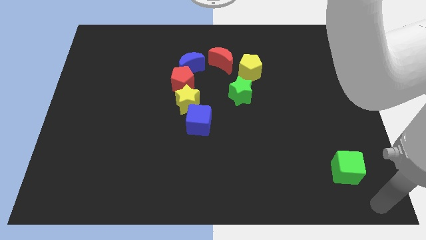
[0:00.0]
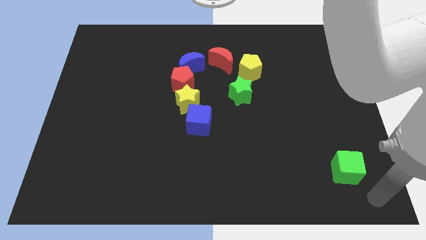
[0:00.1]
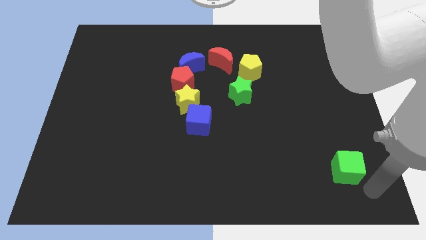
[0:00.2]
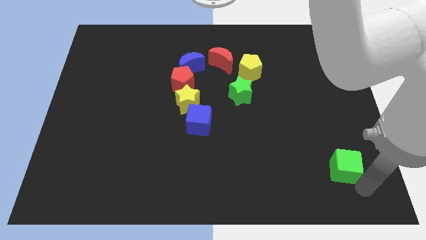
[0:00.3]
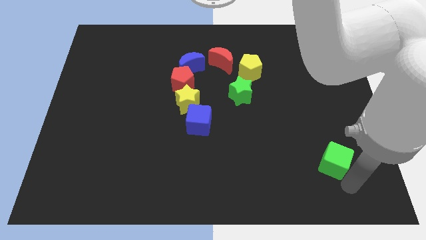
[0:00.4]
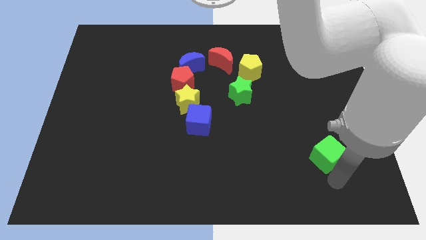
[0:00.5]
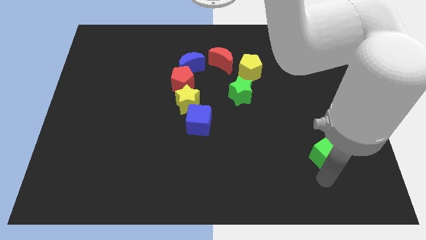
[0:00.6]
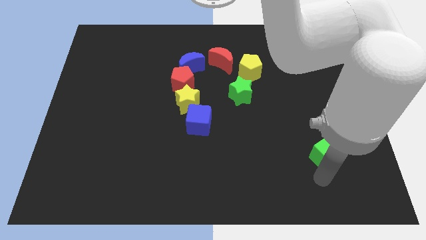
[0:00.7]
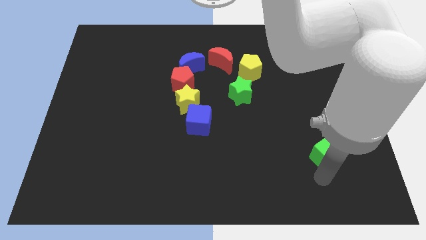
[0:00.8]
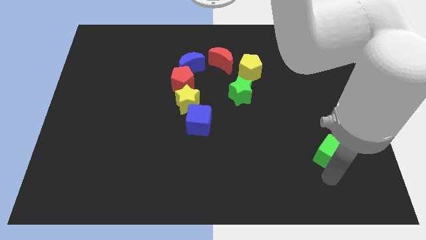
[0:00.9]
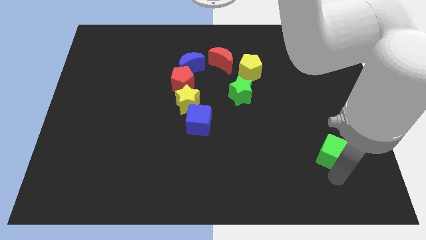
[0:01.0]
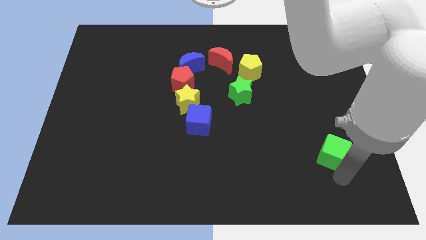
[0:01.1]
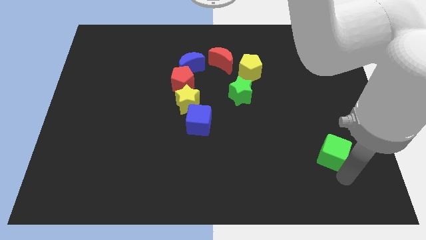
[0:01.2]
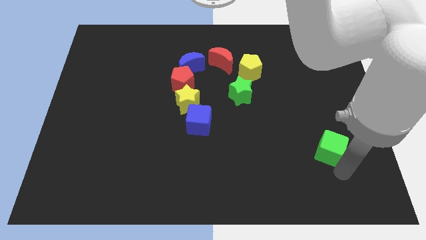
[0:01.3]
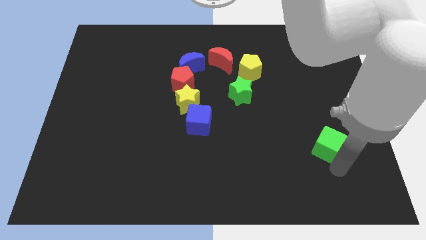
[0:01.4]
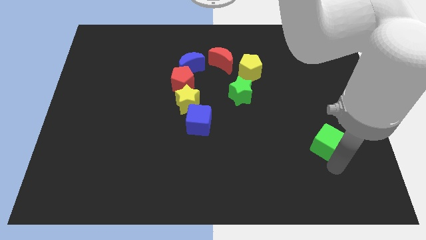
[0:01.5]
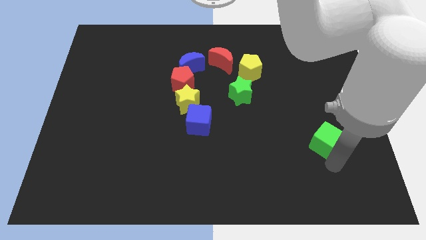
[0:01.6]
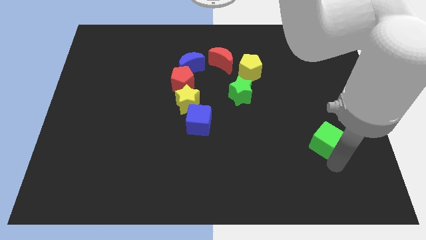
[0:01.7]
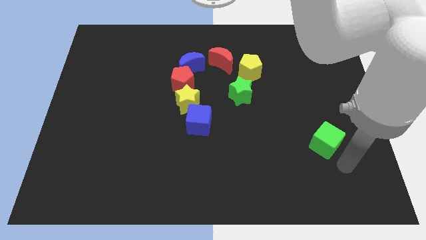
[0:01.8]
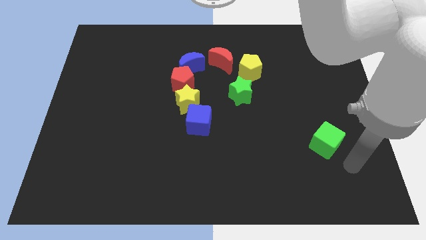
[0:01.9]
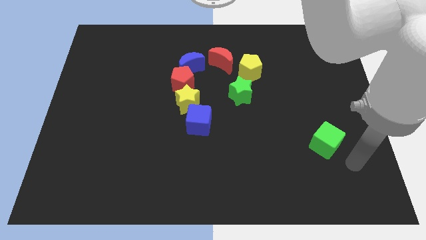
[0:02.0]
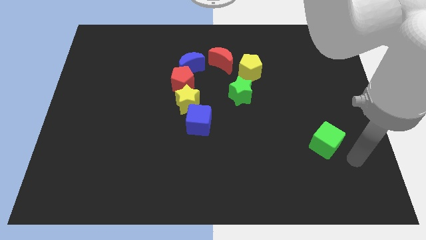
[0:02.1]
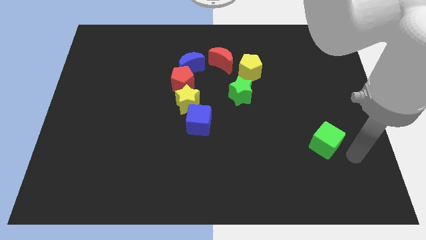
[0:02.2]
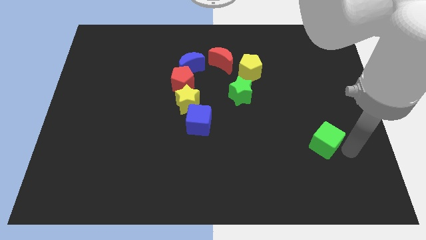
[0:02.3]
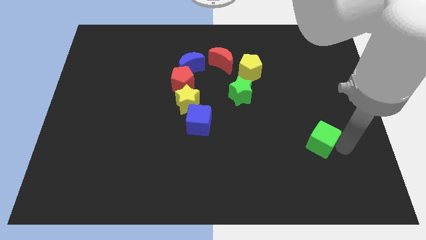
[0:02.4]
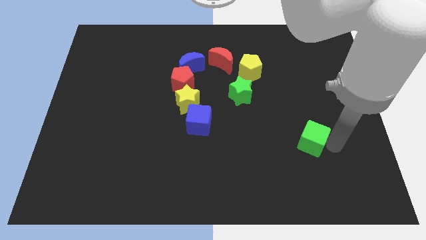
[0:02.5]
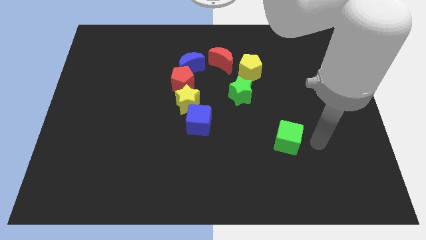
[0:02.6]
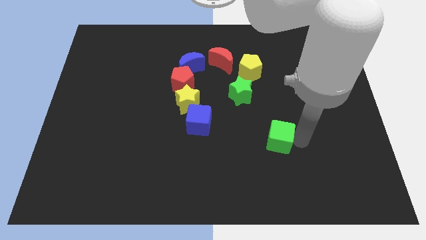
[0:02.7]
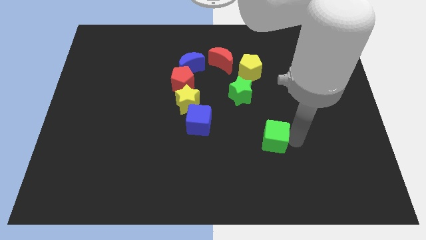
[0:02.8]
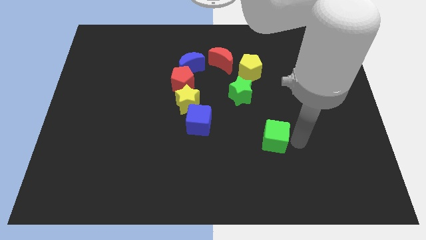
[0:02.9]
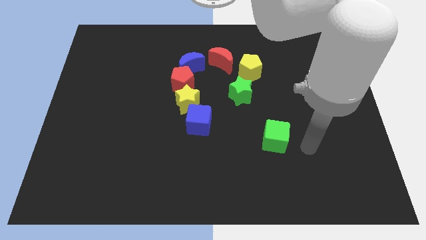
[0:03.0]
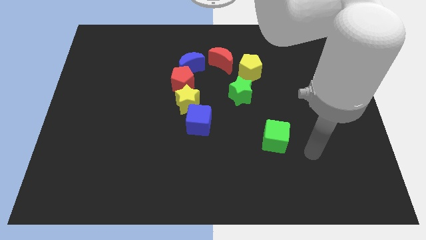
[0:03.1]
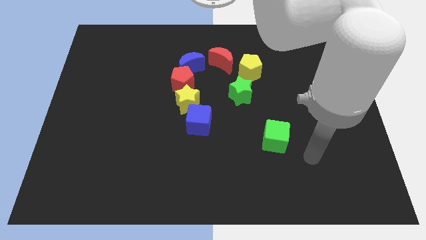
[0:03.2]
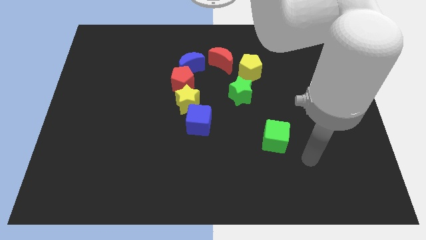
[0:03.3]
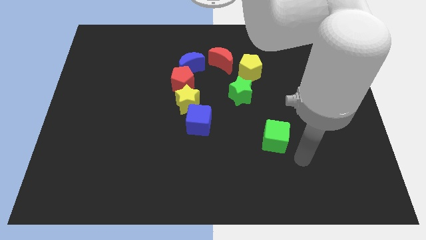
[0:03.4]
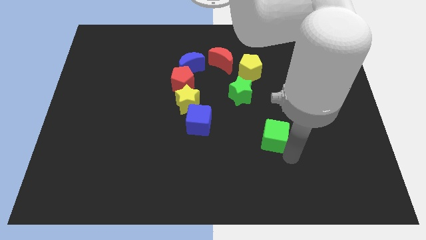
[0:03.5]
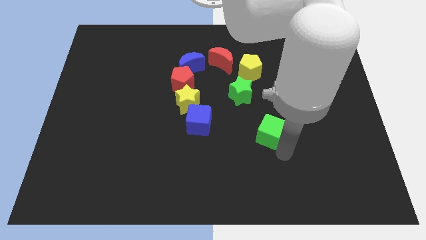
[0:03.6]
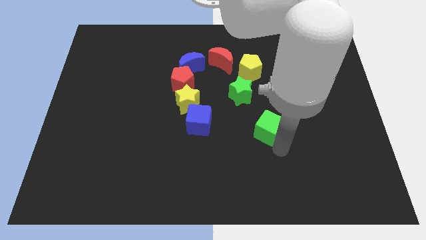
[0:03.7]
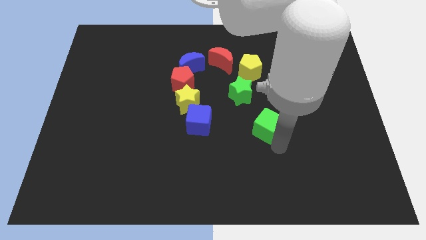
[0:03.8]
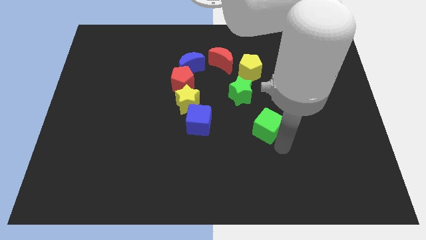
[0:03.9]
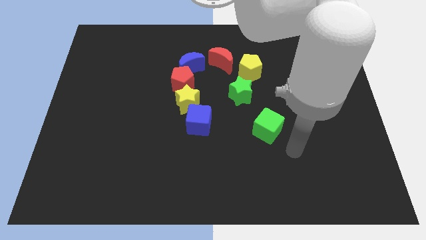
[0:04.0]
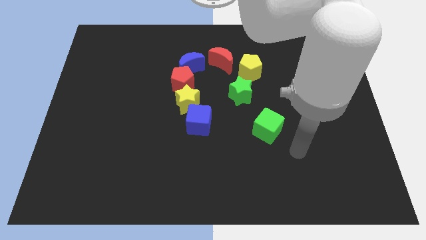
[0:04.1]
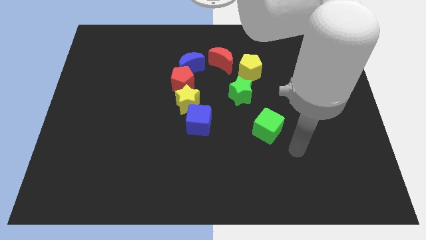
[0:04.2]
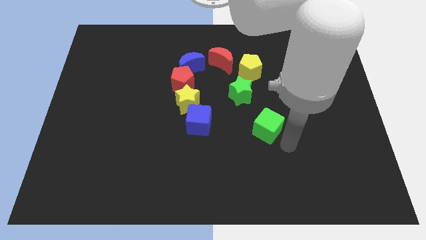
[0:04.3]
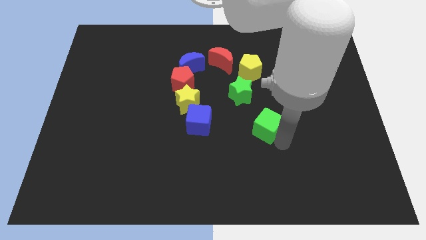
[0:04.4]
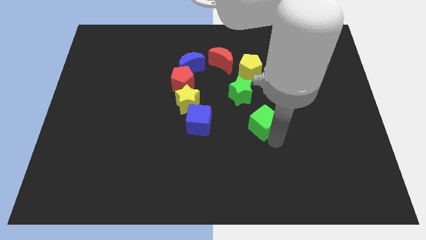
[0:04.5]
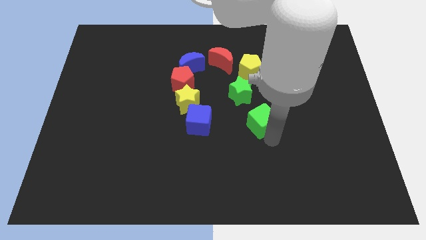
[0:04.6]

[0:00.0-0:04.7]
push the green cube to the horizontal right side of the blue cube

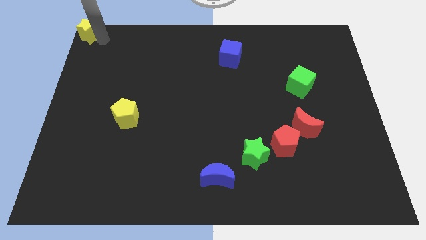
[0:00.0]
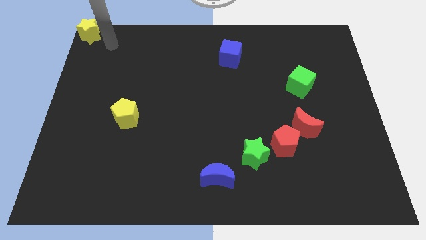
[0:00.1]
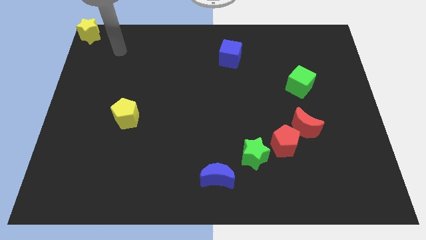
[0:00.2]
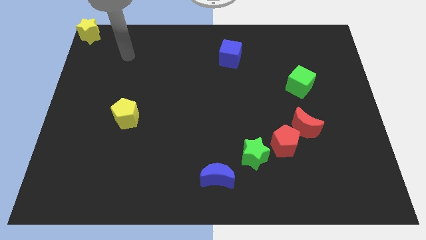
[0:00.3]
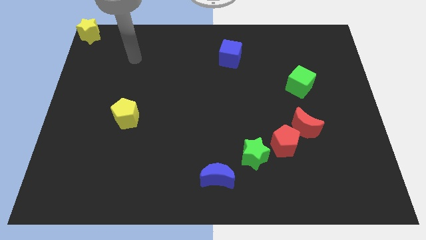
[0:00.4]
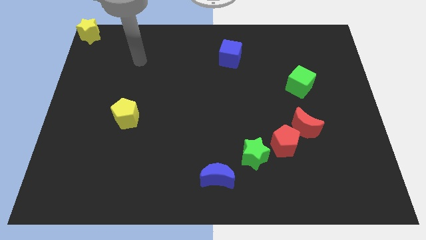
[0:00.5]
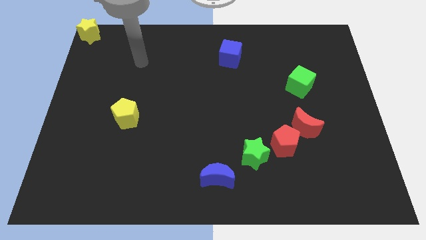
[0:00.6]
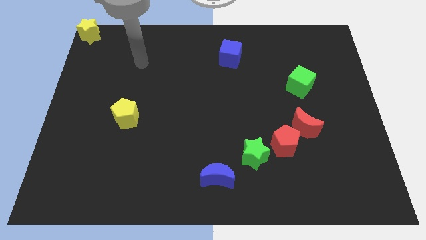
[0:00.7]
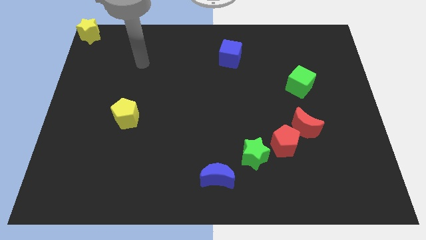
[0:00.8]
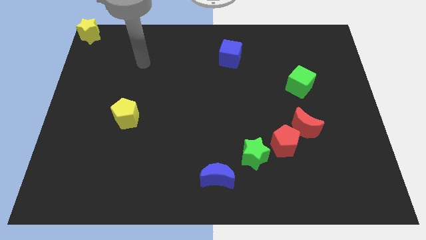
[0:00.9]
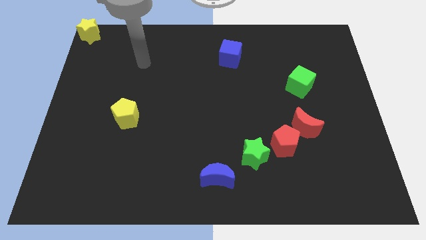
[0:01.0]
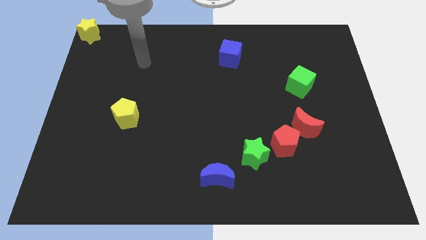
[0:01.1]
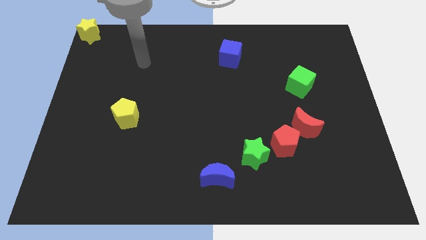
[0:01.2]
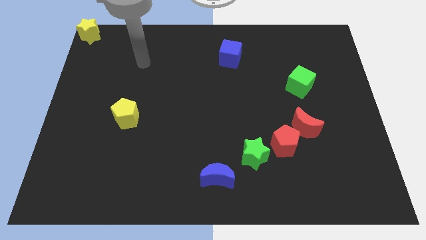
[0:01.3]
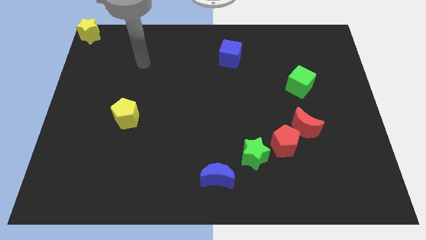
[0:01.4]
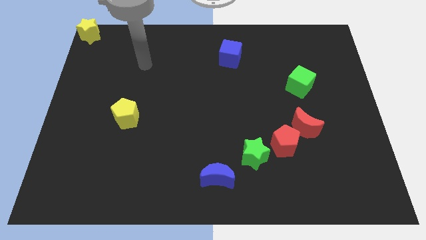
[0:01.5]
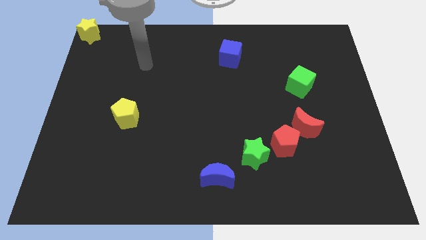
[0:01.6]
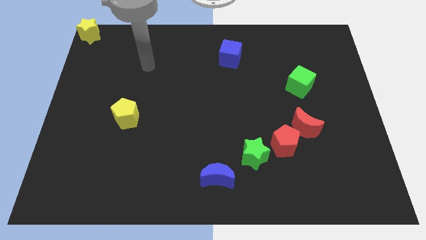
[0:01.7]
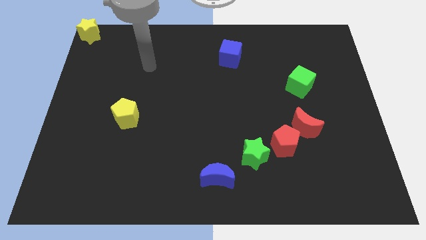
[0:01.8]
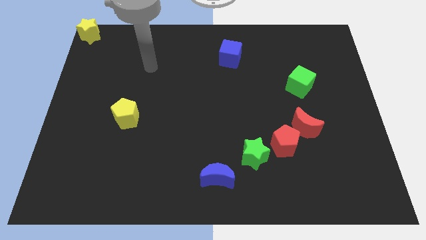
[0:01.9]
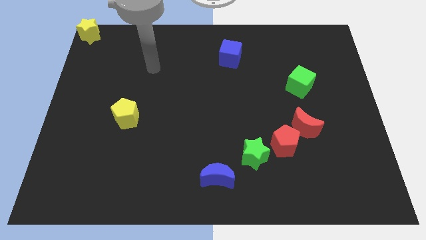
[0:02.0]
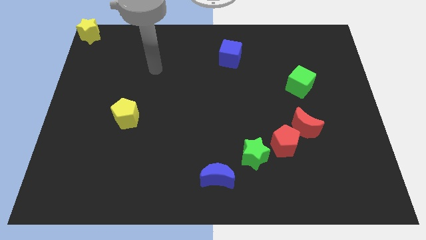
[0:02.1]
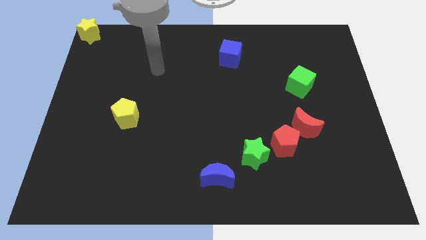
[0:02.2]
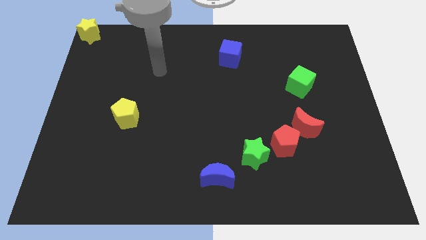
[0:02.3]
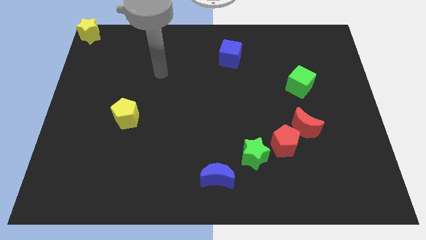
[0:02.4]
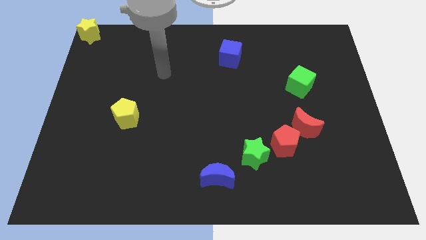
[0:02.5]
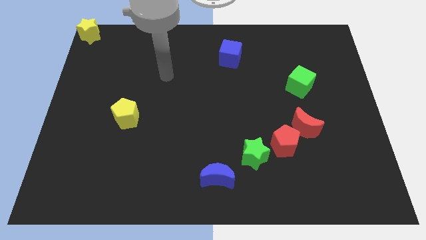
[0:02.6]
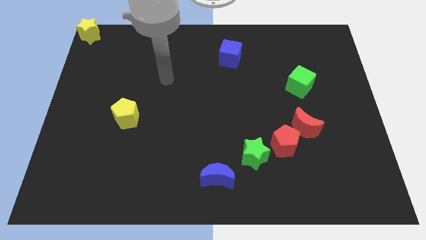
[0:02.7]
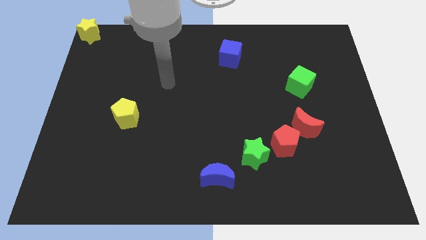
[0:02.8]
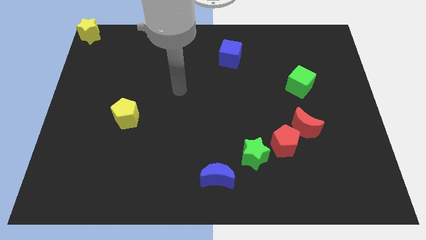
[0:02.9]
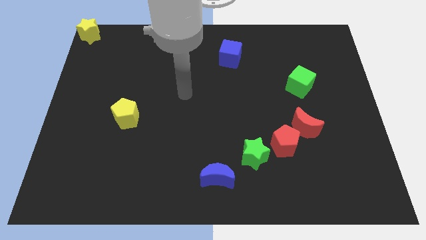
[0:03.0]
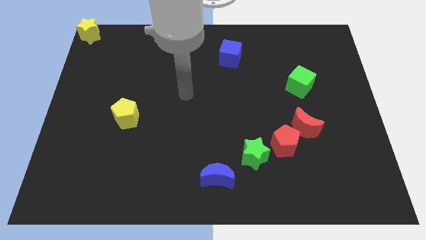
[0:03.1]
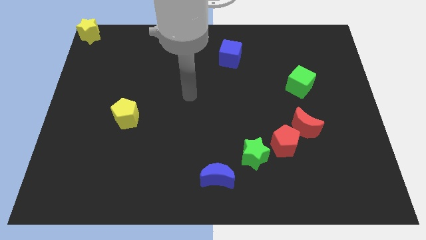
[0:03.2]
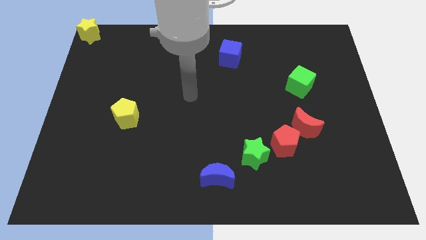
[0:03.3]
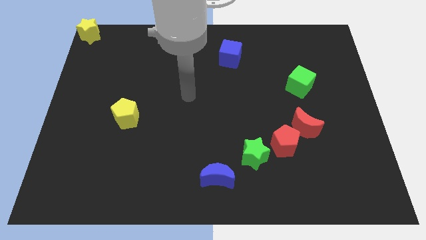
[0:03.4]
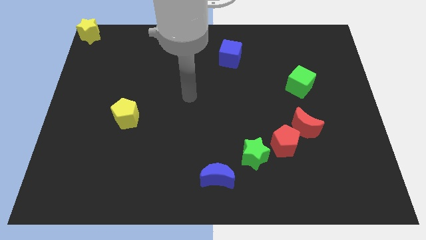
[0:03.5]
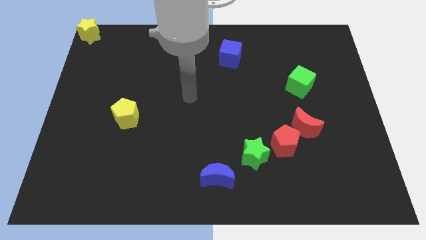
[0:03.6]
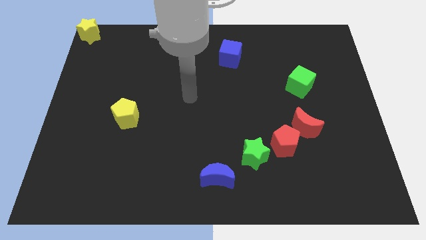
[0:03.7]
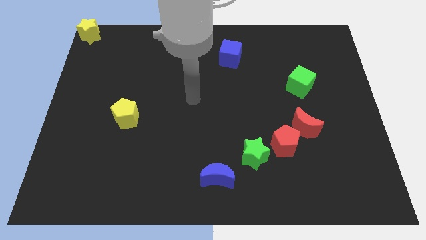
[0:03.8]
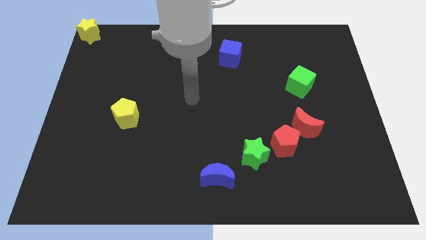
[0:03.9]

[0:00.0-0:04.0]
move your arm away from the yellow star

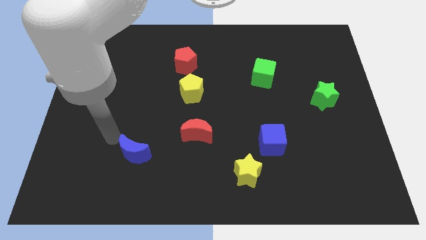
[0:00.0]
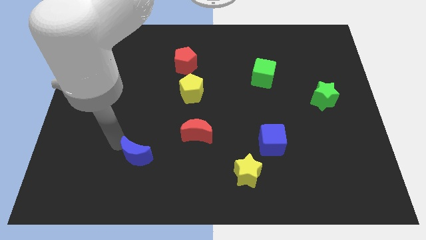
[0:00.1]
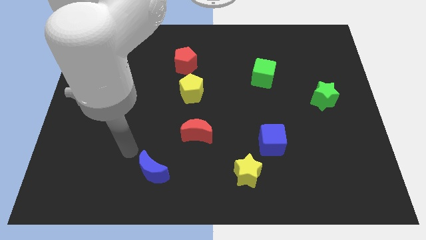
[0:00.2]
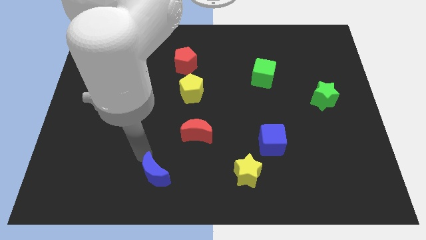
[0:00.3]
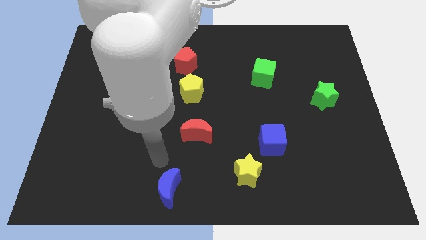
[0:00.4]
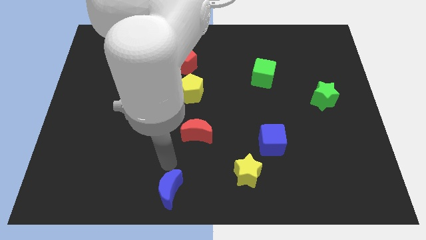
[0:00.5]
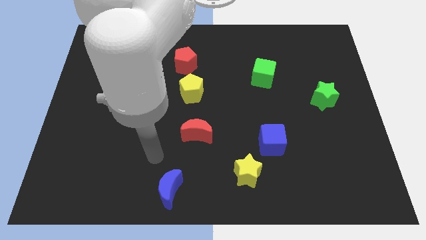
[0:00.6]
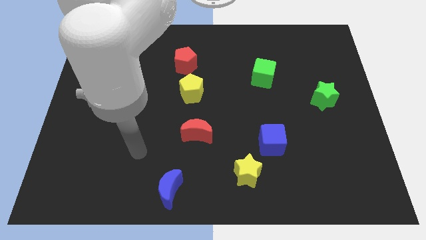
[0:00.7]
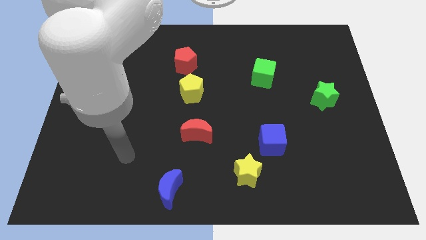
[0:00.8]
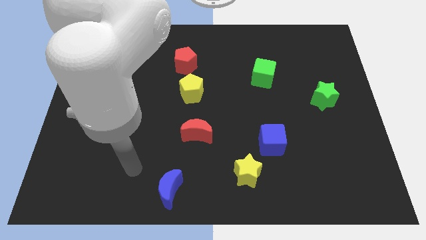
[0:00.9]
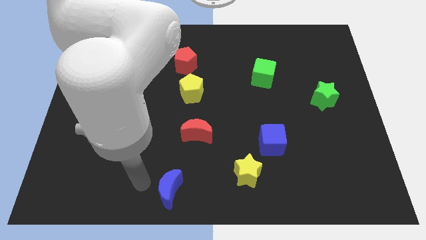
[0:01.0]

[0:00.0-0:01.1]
push the blue moon downward
